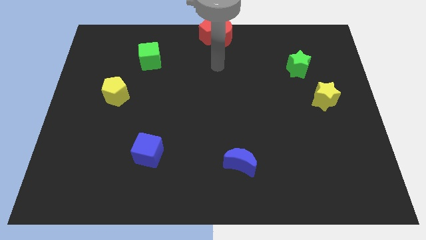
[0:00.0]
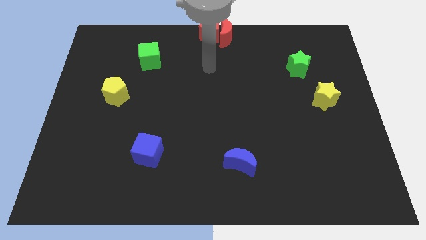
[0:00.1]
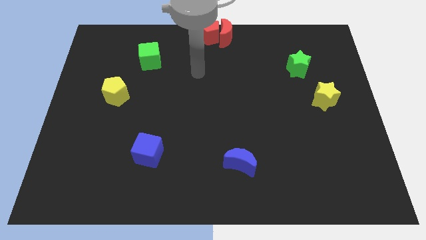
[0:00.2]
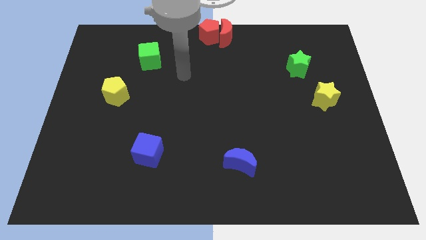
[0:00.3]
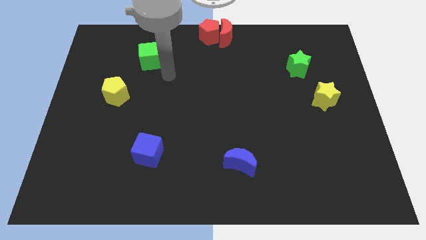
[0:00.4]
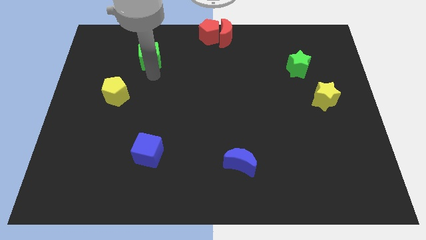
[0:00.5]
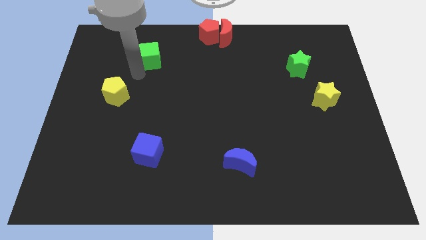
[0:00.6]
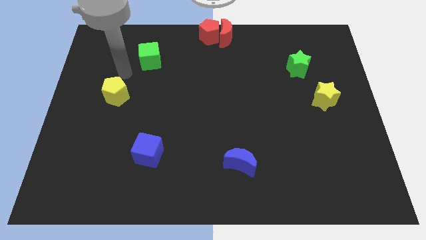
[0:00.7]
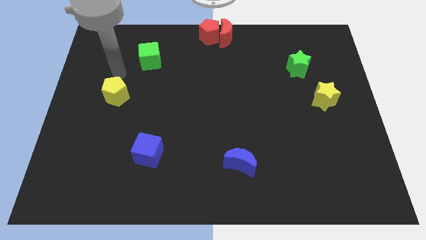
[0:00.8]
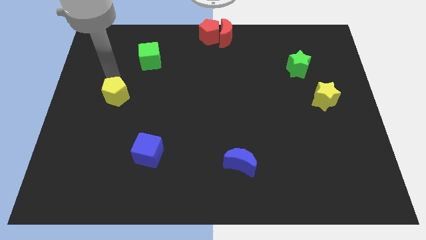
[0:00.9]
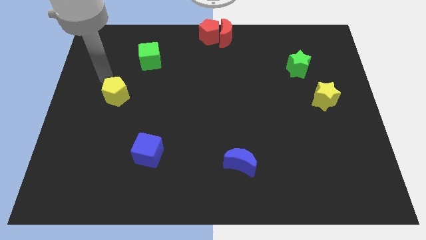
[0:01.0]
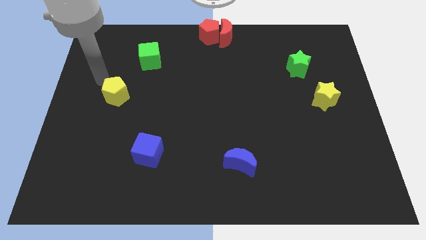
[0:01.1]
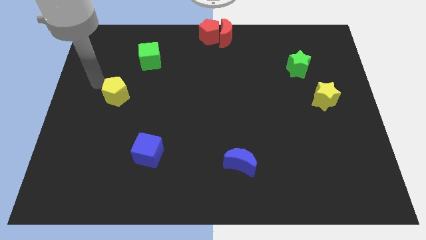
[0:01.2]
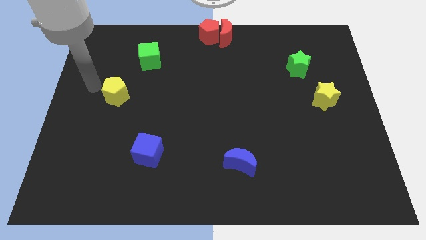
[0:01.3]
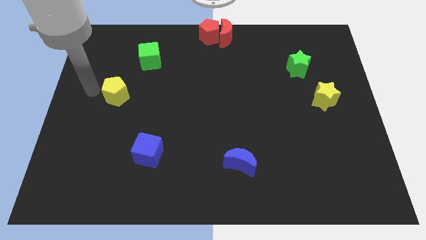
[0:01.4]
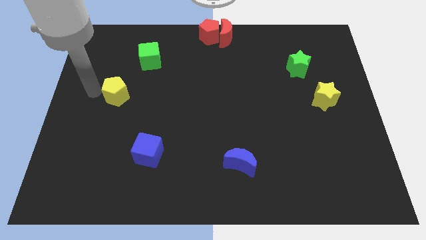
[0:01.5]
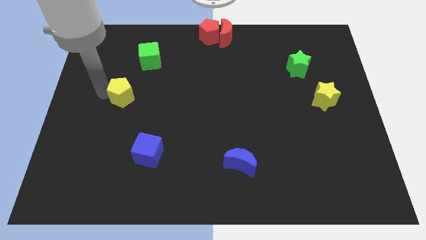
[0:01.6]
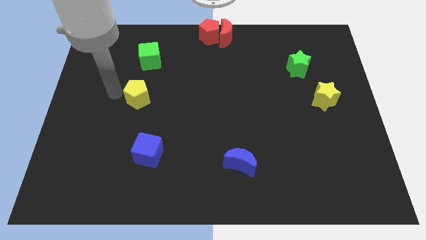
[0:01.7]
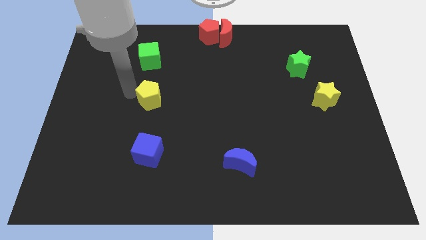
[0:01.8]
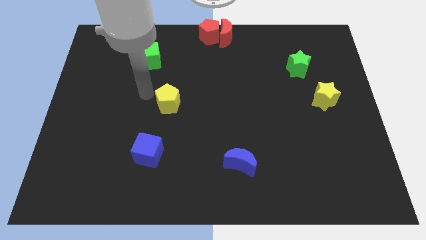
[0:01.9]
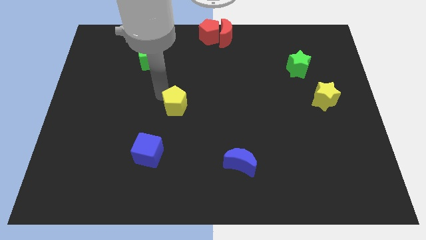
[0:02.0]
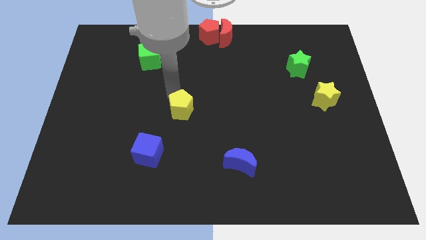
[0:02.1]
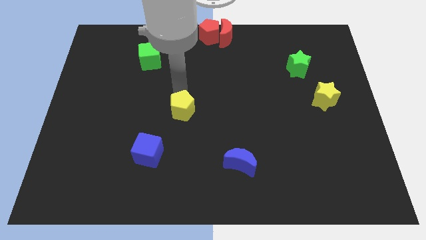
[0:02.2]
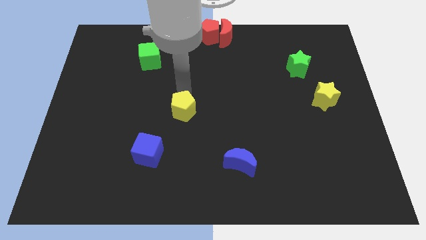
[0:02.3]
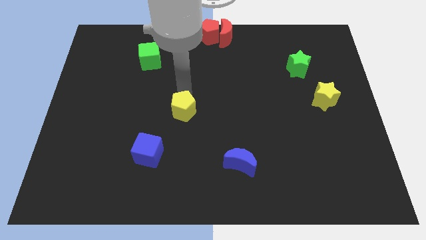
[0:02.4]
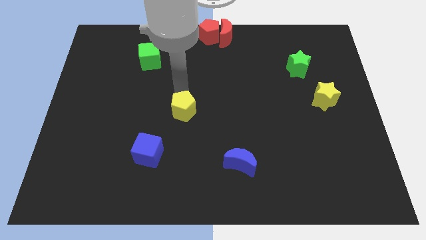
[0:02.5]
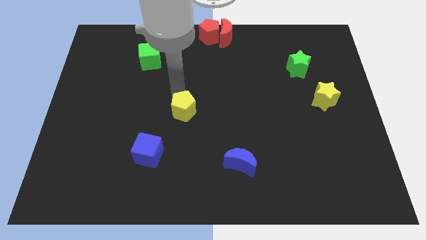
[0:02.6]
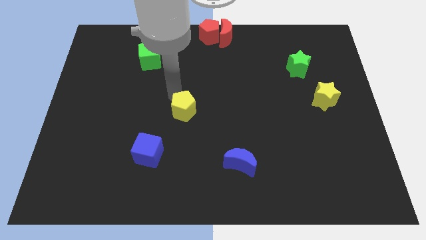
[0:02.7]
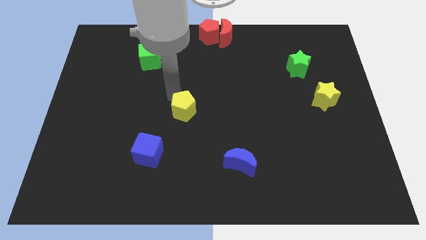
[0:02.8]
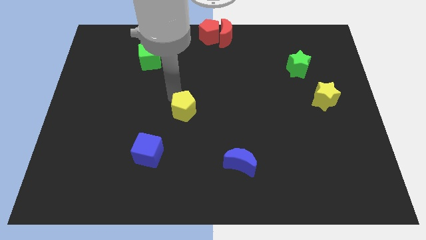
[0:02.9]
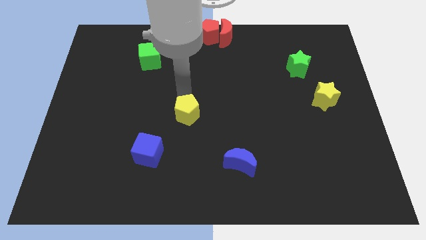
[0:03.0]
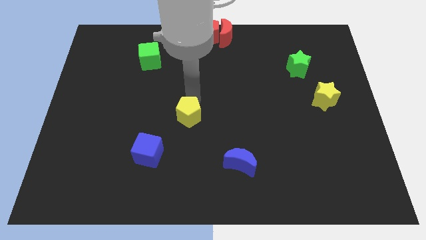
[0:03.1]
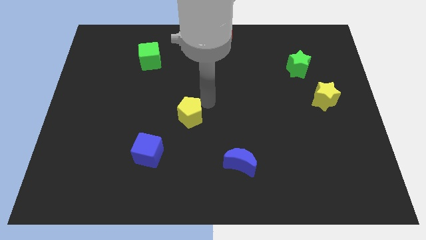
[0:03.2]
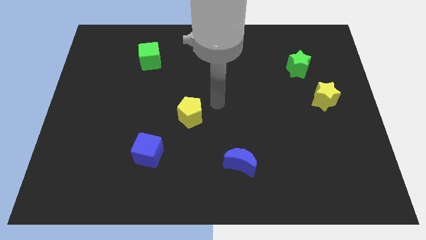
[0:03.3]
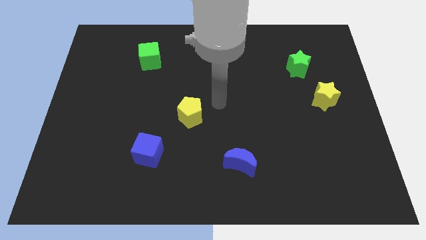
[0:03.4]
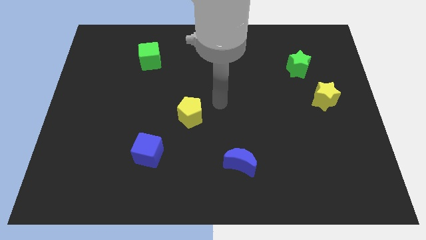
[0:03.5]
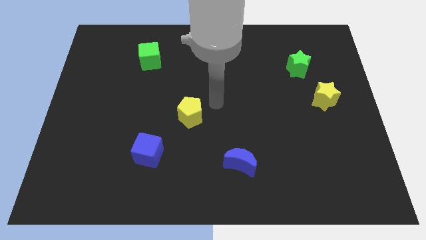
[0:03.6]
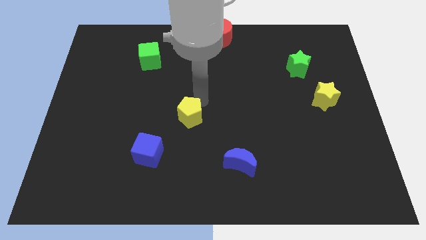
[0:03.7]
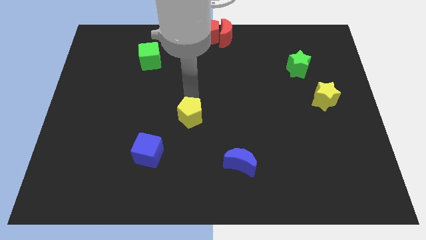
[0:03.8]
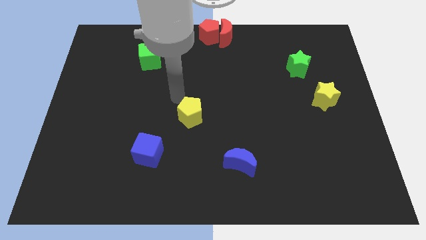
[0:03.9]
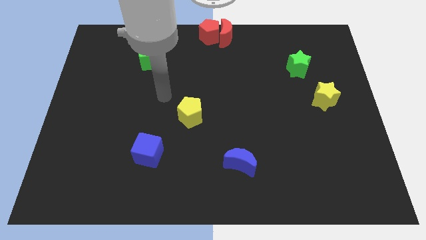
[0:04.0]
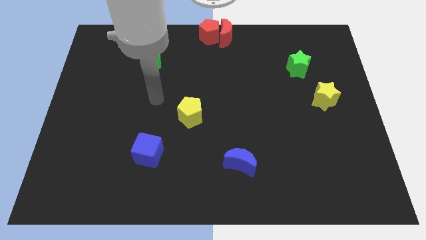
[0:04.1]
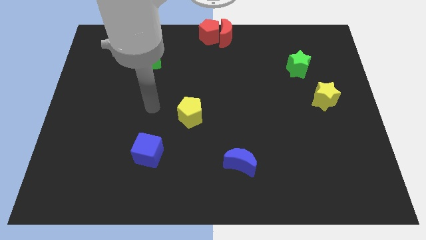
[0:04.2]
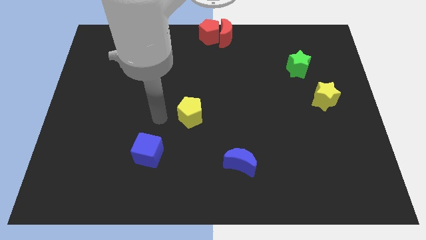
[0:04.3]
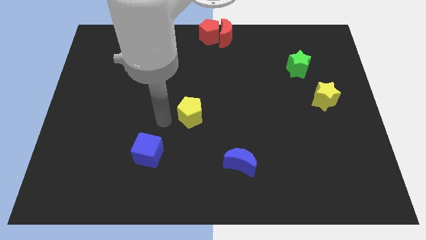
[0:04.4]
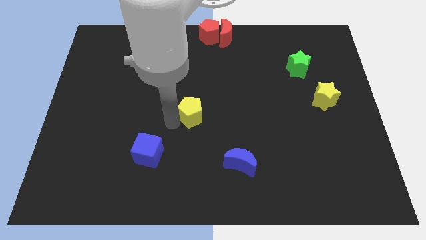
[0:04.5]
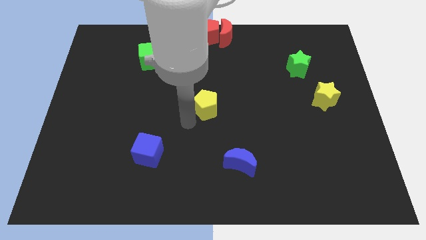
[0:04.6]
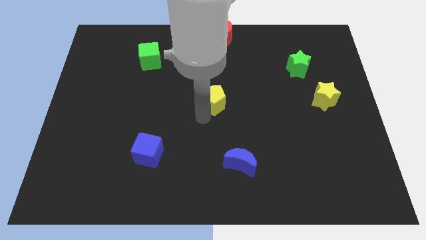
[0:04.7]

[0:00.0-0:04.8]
place the yellow pentagon at the center of the board

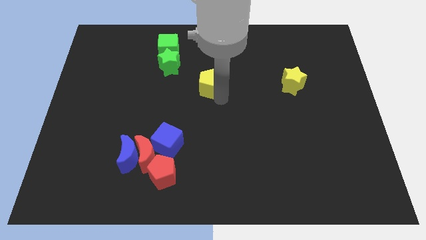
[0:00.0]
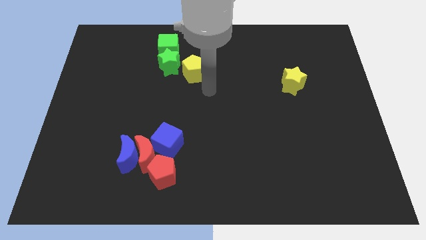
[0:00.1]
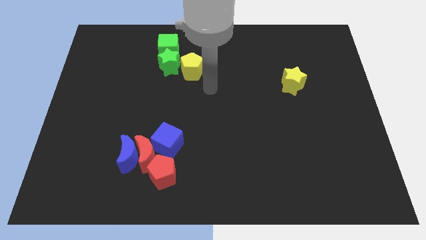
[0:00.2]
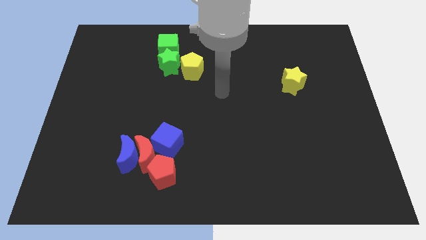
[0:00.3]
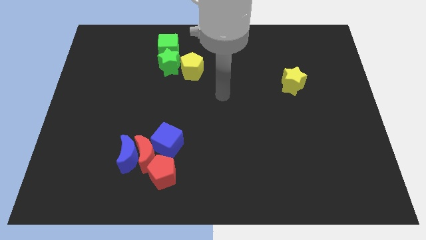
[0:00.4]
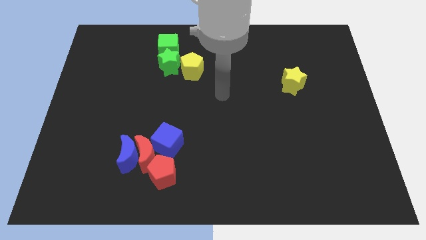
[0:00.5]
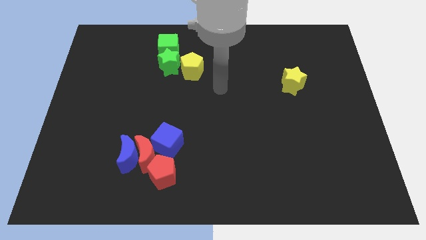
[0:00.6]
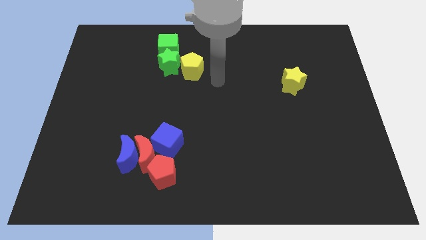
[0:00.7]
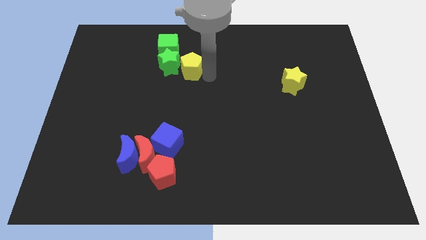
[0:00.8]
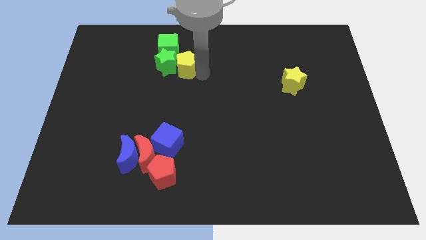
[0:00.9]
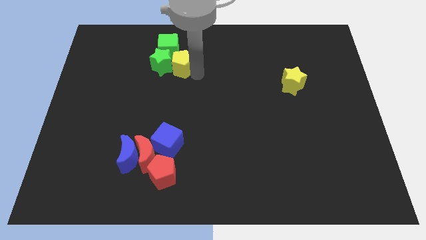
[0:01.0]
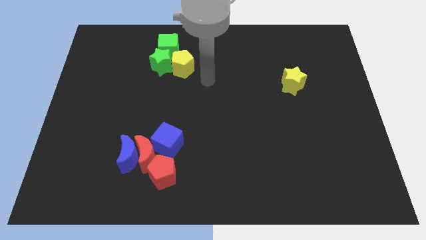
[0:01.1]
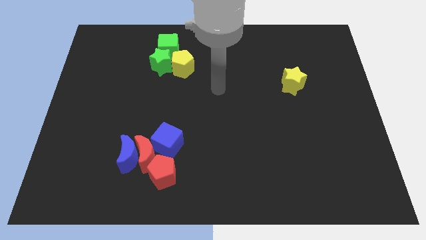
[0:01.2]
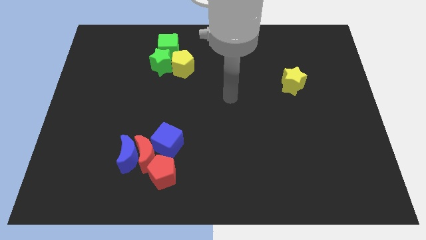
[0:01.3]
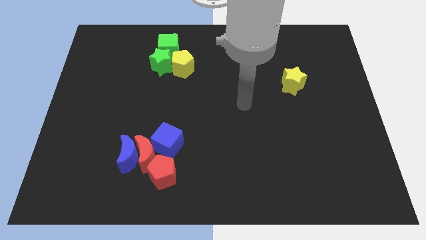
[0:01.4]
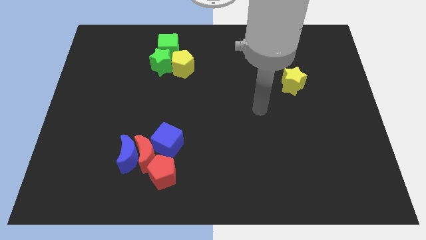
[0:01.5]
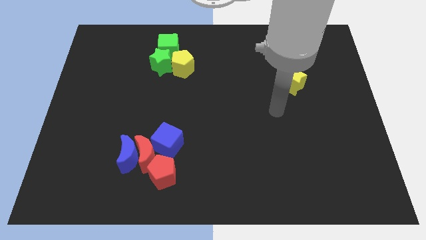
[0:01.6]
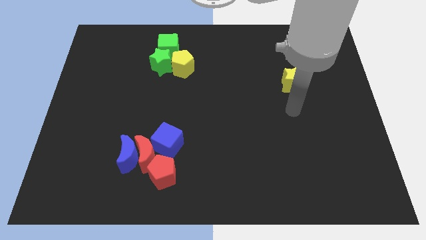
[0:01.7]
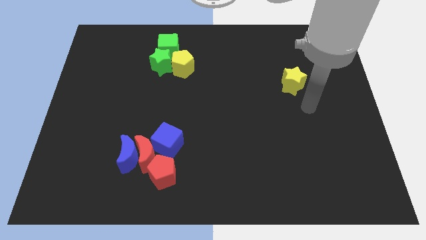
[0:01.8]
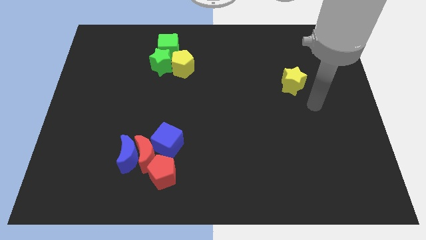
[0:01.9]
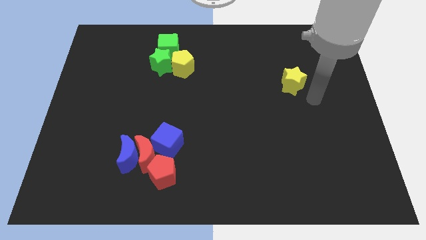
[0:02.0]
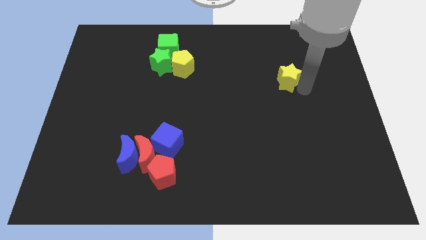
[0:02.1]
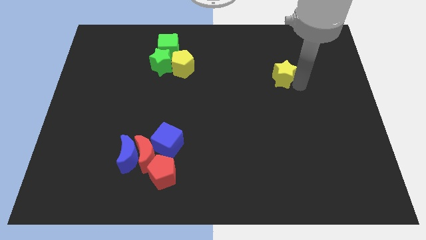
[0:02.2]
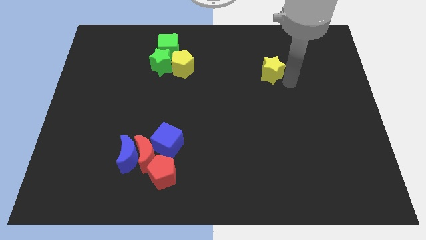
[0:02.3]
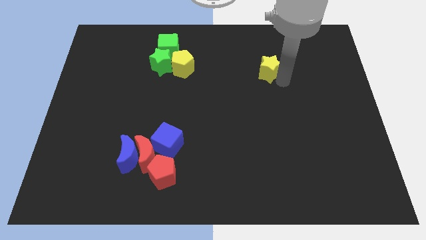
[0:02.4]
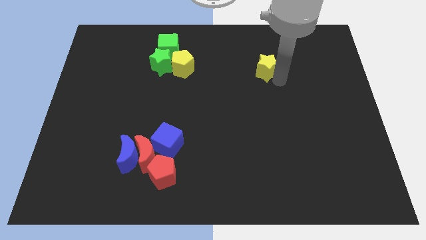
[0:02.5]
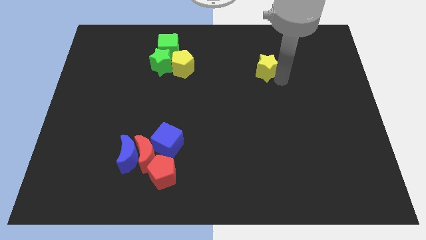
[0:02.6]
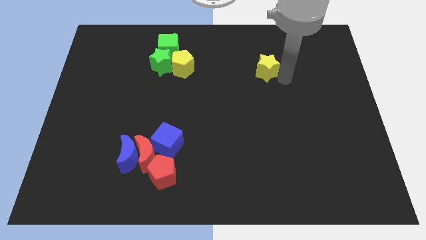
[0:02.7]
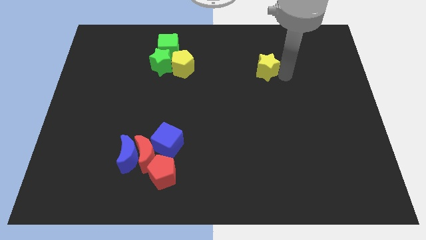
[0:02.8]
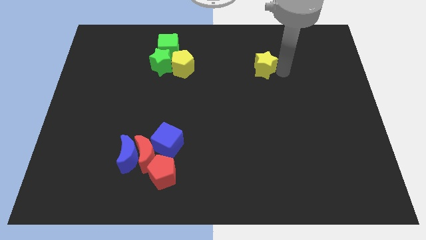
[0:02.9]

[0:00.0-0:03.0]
move the yellow pentagon into green star

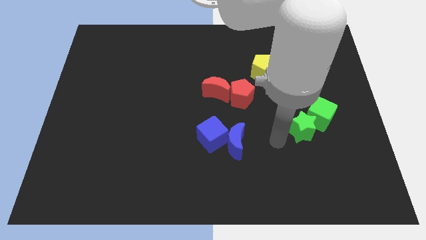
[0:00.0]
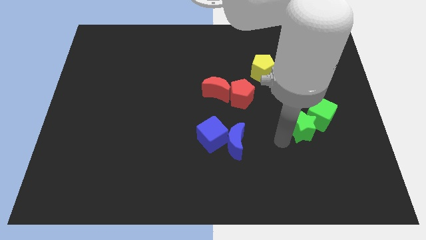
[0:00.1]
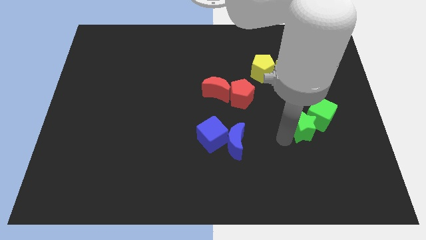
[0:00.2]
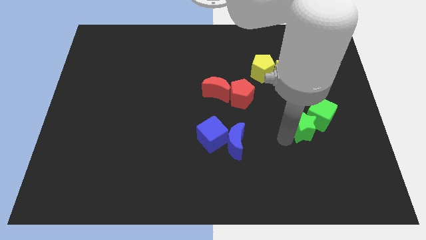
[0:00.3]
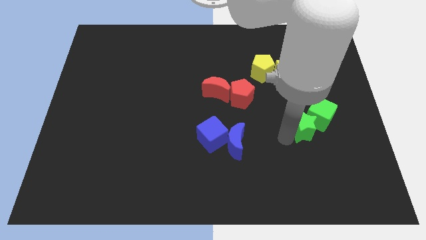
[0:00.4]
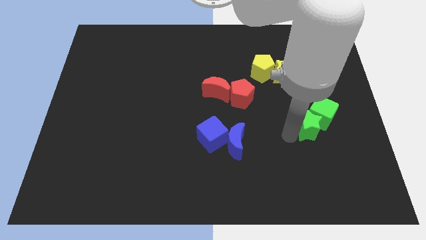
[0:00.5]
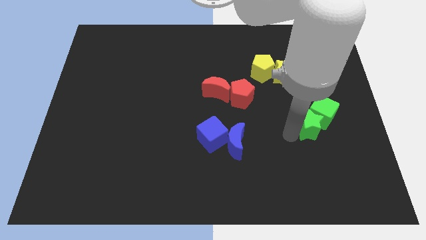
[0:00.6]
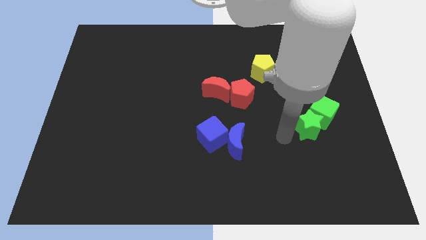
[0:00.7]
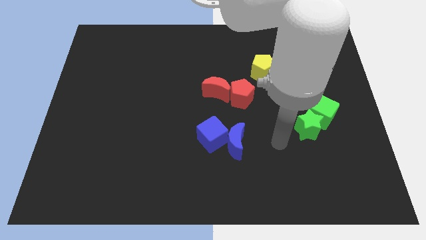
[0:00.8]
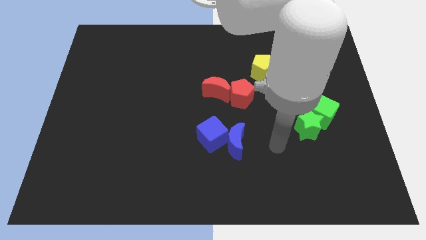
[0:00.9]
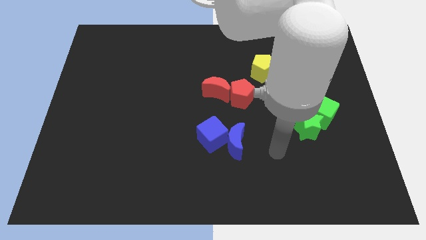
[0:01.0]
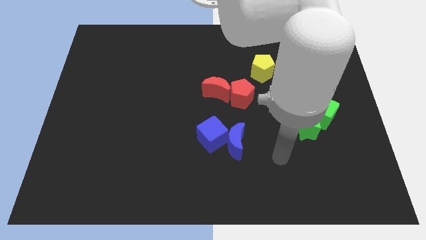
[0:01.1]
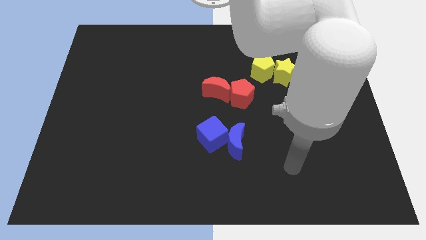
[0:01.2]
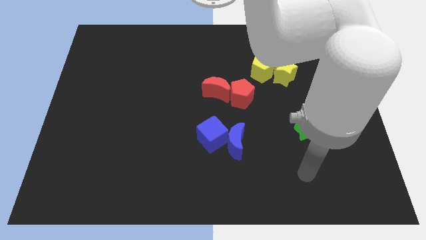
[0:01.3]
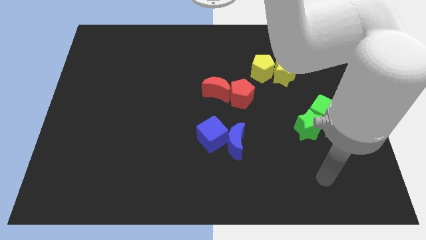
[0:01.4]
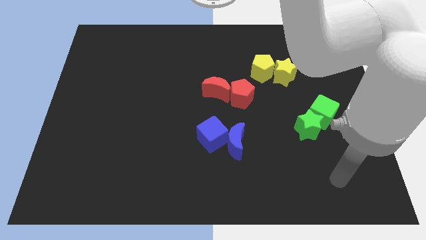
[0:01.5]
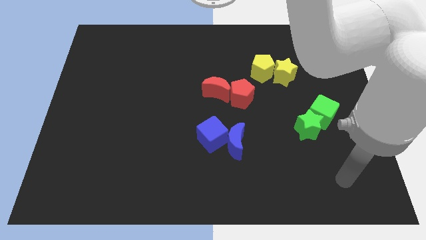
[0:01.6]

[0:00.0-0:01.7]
slightly push the green blocks towards the right side
